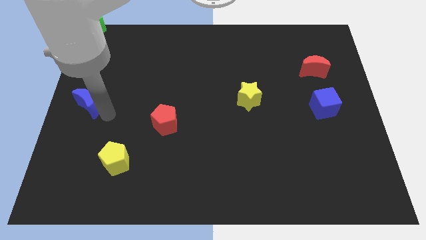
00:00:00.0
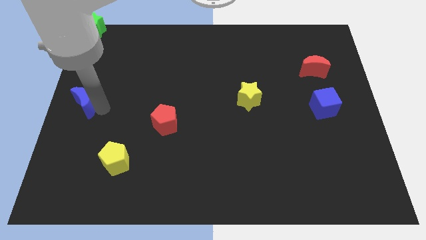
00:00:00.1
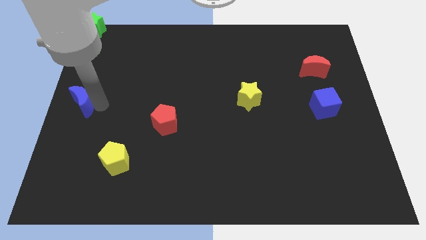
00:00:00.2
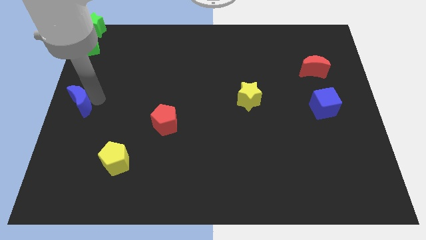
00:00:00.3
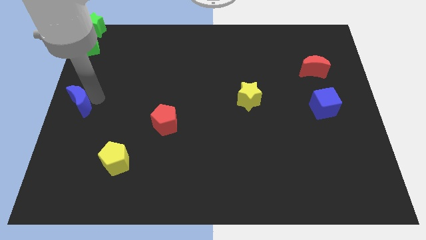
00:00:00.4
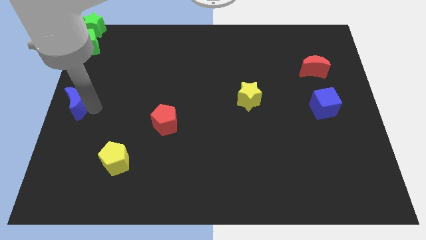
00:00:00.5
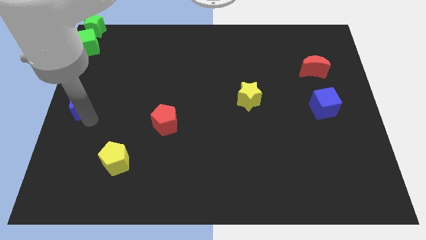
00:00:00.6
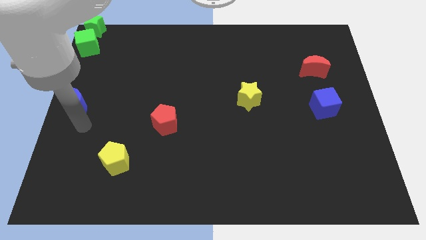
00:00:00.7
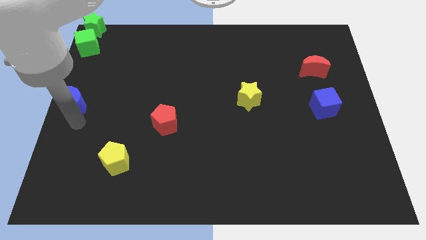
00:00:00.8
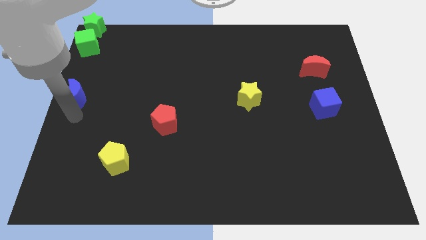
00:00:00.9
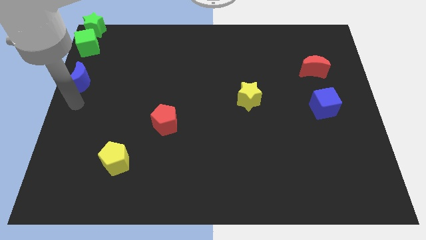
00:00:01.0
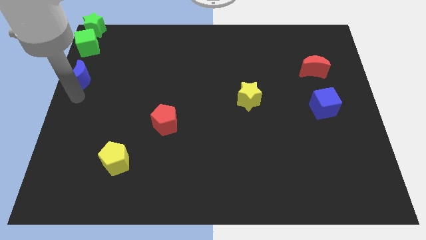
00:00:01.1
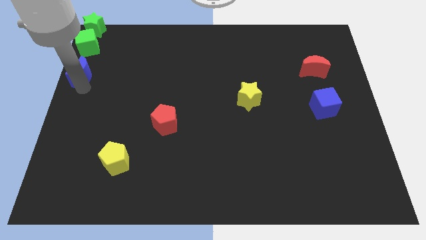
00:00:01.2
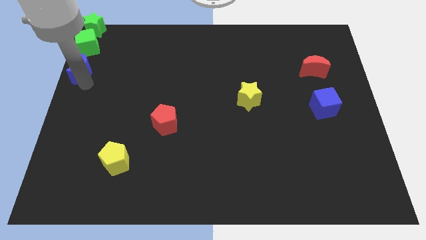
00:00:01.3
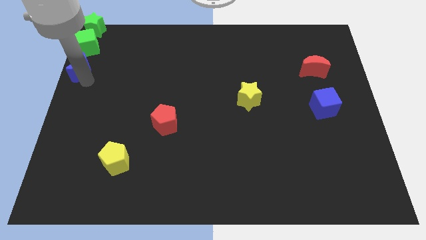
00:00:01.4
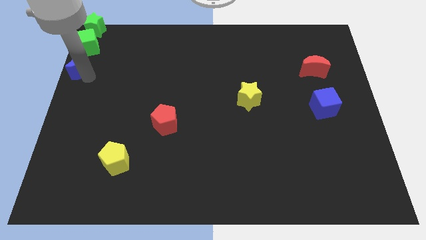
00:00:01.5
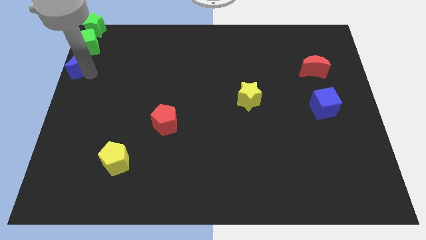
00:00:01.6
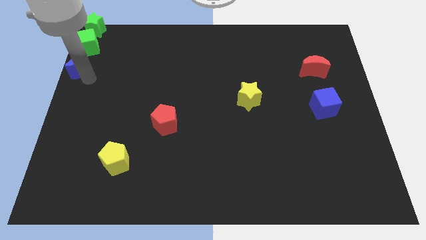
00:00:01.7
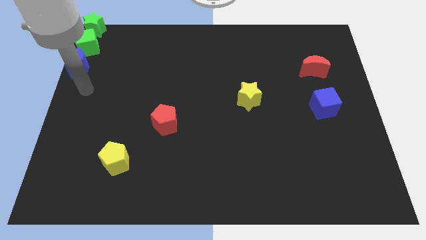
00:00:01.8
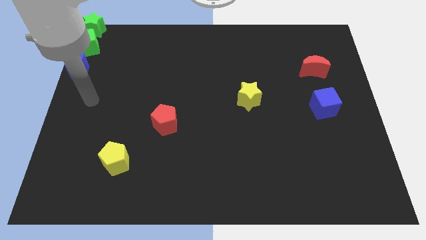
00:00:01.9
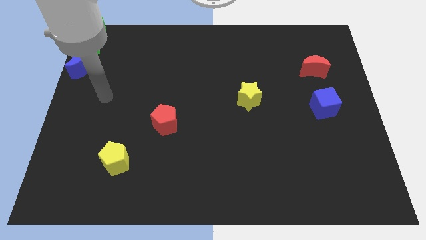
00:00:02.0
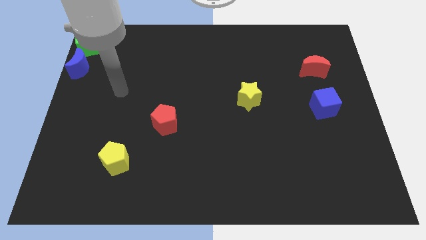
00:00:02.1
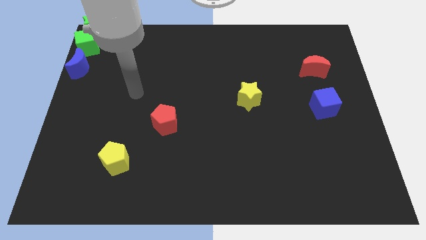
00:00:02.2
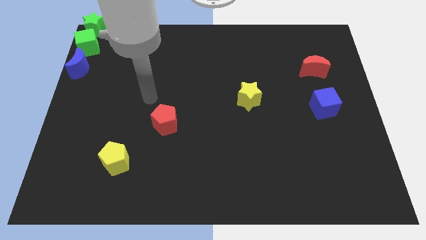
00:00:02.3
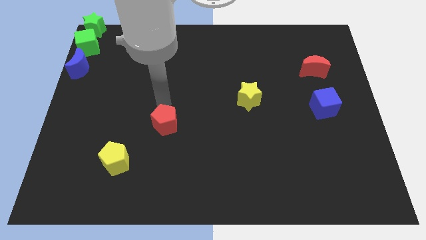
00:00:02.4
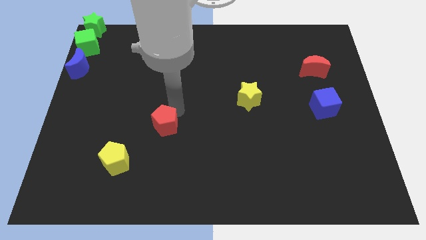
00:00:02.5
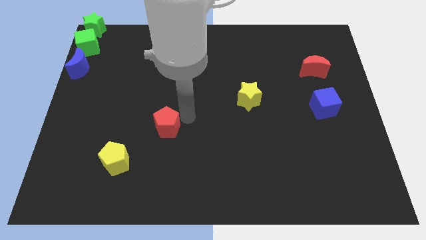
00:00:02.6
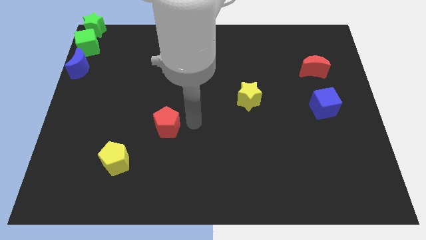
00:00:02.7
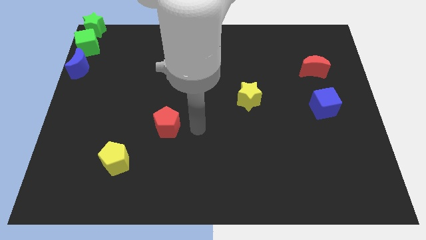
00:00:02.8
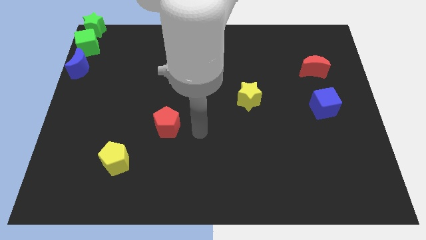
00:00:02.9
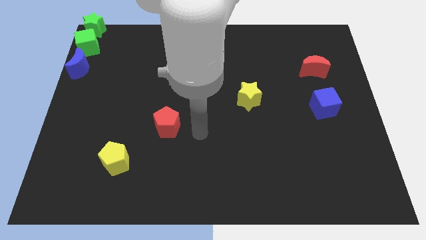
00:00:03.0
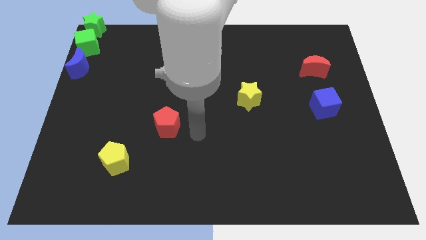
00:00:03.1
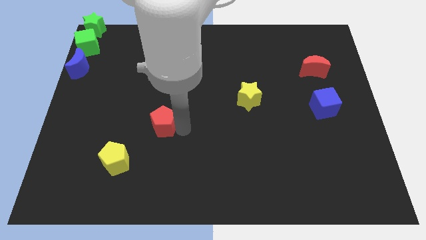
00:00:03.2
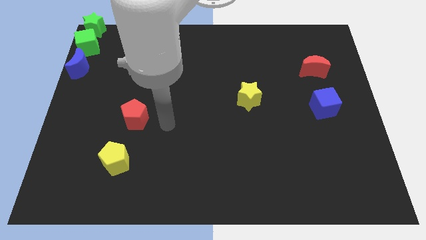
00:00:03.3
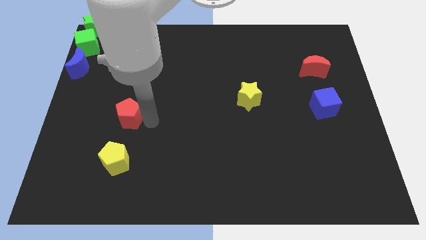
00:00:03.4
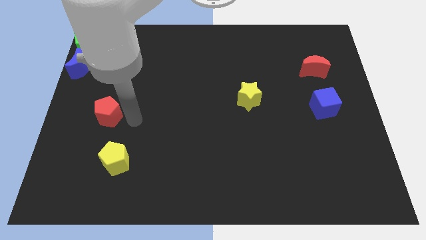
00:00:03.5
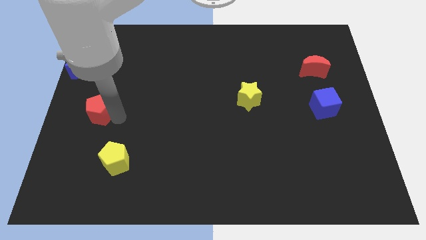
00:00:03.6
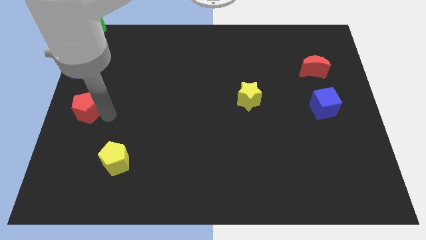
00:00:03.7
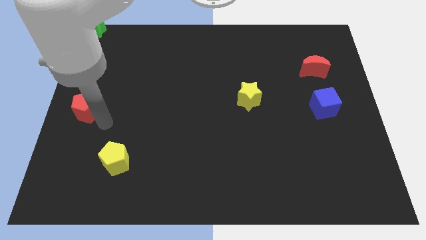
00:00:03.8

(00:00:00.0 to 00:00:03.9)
place the red pentagon diagonal to the blue moon

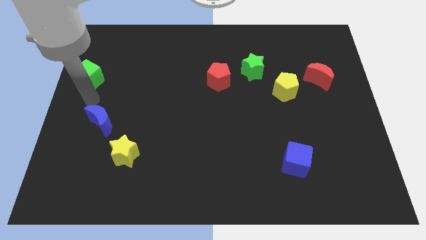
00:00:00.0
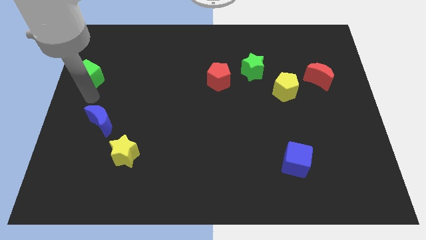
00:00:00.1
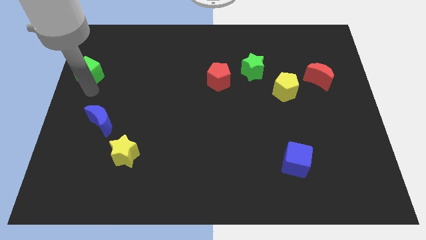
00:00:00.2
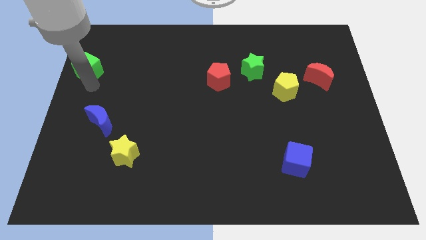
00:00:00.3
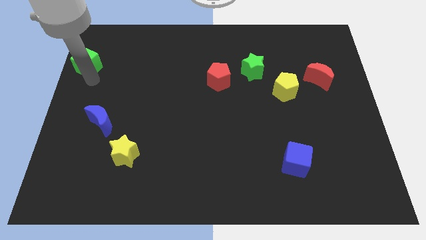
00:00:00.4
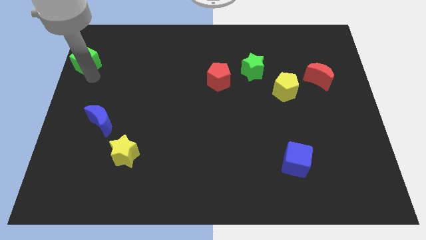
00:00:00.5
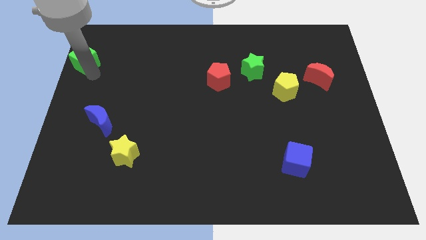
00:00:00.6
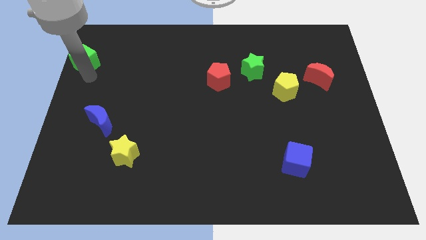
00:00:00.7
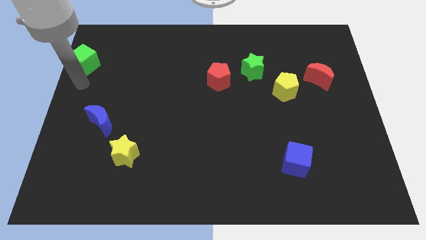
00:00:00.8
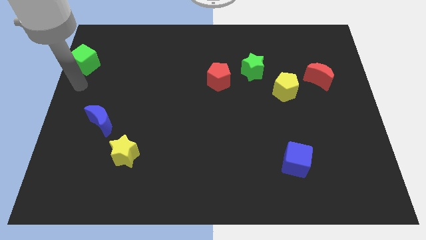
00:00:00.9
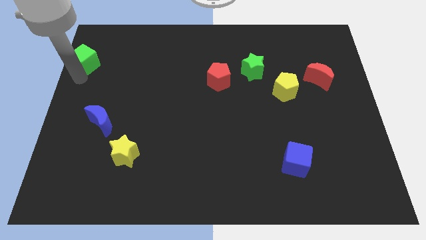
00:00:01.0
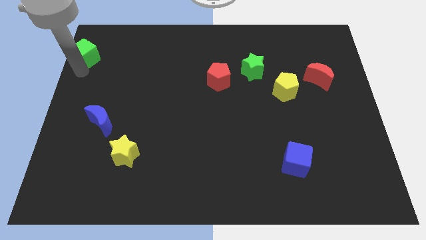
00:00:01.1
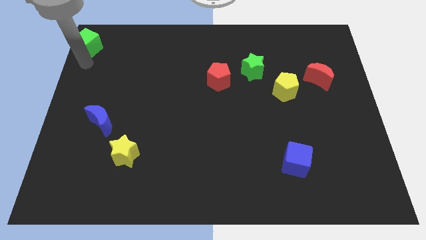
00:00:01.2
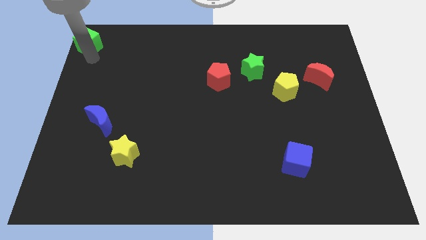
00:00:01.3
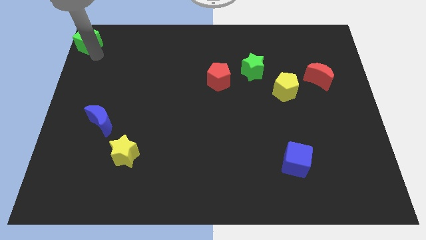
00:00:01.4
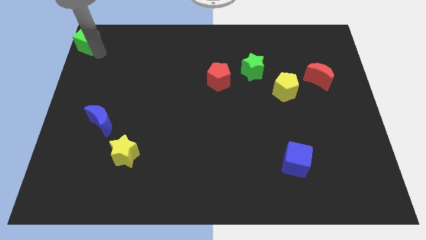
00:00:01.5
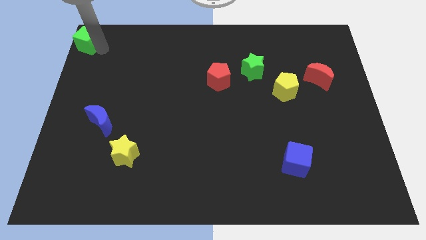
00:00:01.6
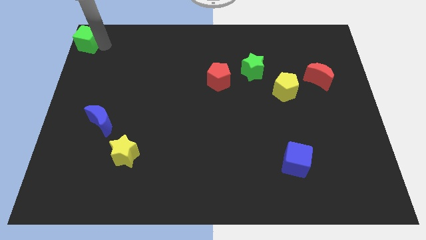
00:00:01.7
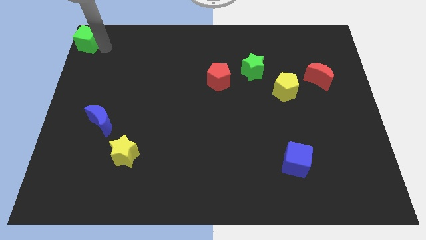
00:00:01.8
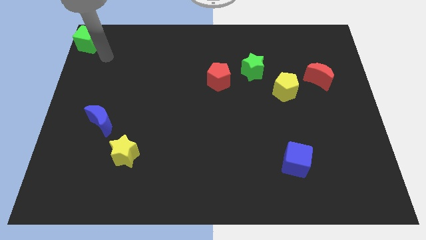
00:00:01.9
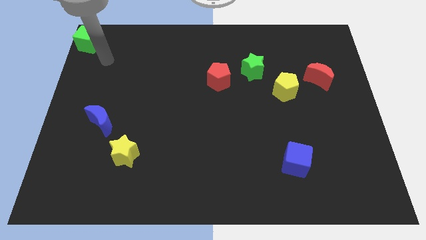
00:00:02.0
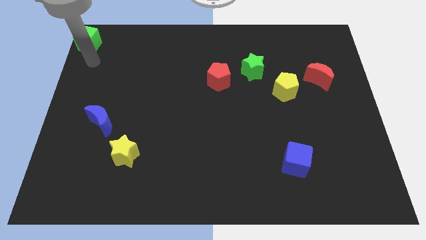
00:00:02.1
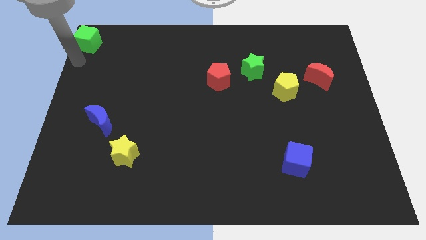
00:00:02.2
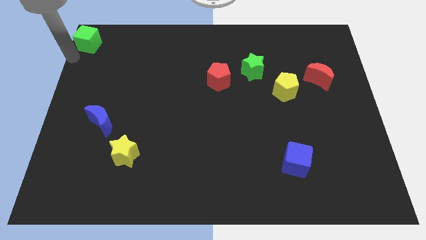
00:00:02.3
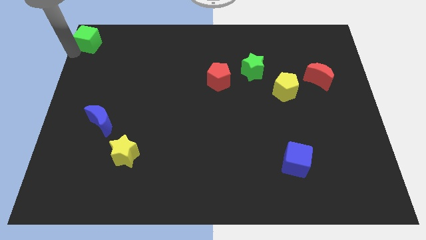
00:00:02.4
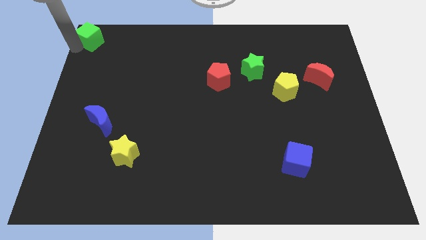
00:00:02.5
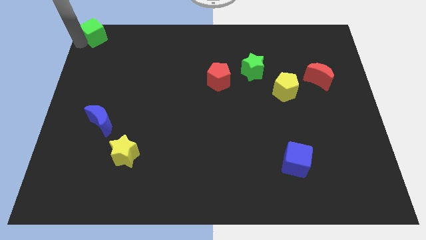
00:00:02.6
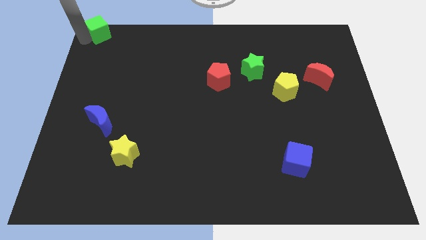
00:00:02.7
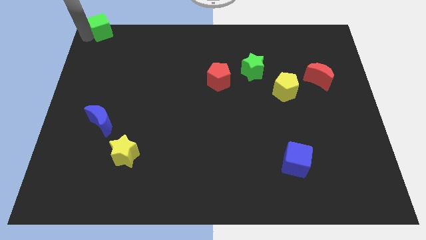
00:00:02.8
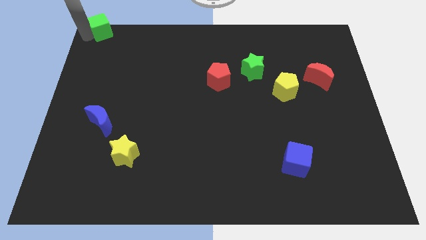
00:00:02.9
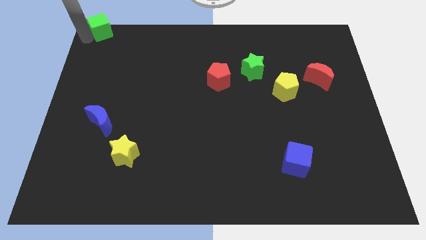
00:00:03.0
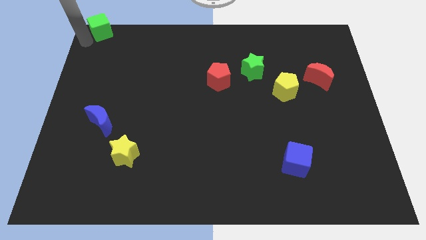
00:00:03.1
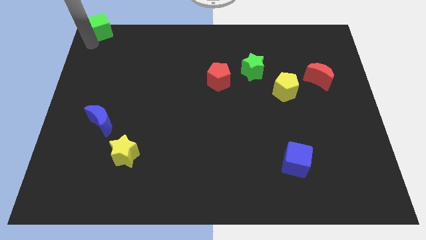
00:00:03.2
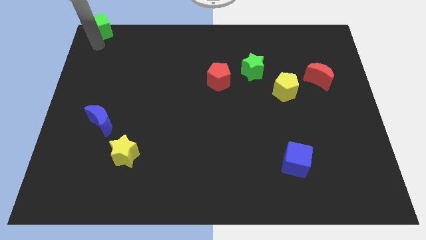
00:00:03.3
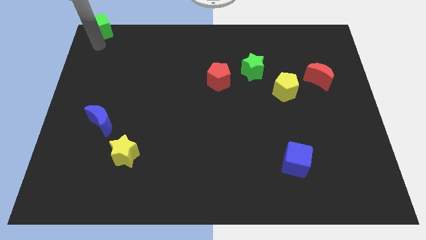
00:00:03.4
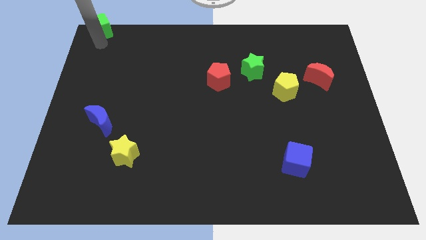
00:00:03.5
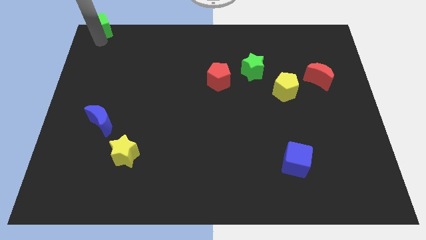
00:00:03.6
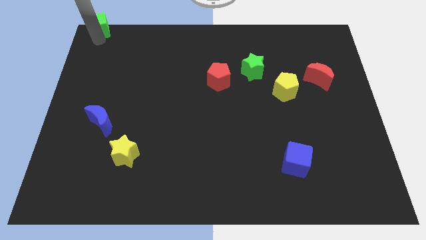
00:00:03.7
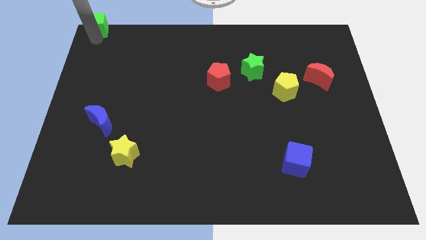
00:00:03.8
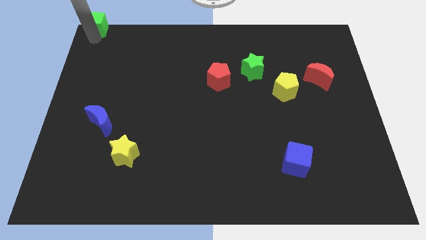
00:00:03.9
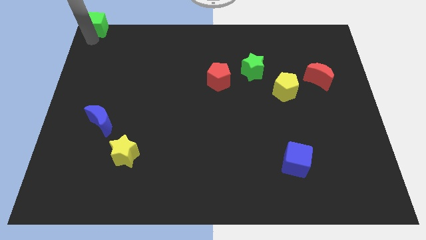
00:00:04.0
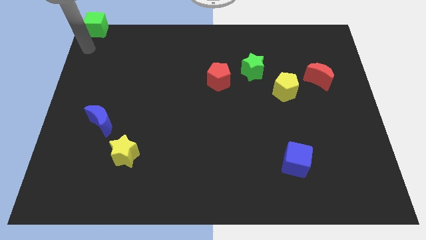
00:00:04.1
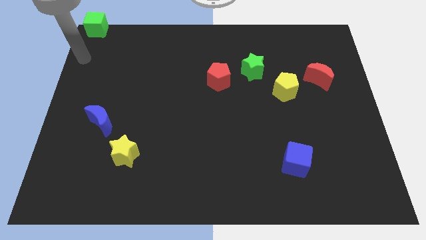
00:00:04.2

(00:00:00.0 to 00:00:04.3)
place the green cube at the top left corner of the board

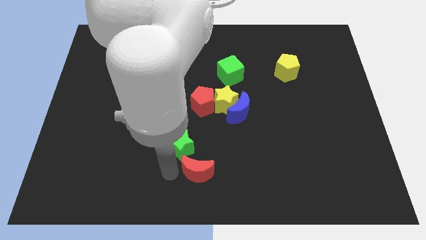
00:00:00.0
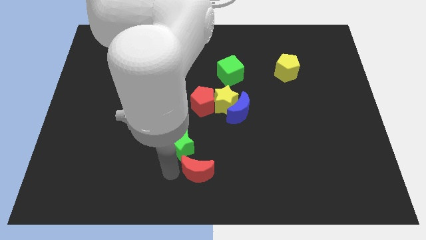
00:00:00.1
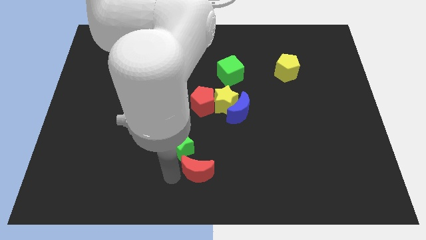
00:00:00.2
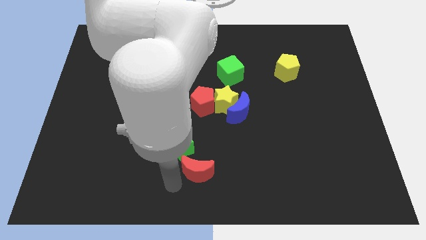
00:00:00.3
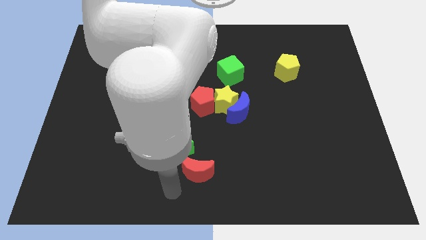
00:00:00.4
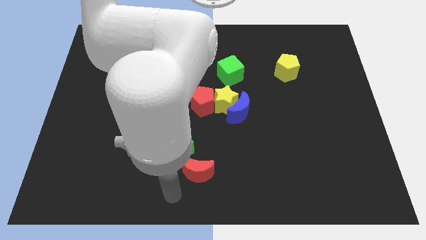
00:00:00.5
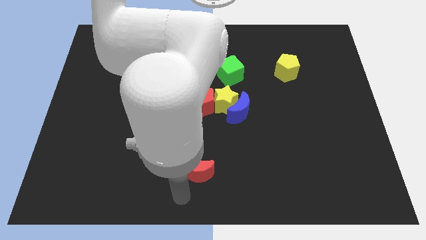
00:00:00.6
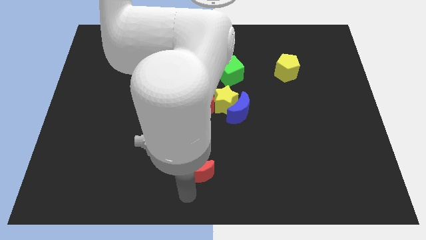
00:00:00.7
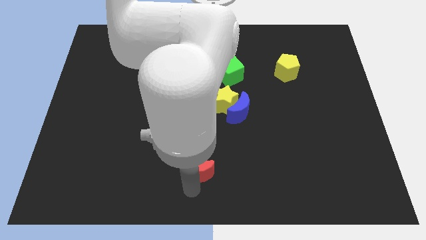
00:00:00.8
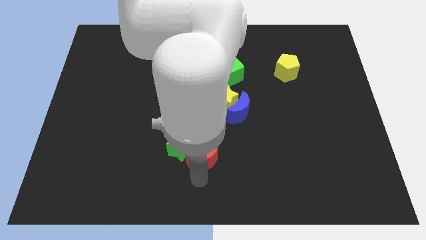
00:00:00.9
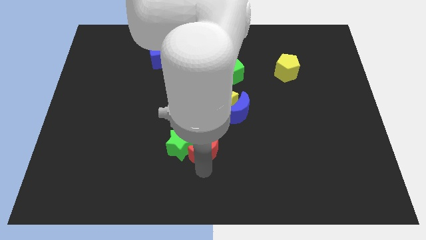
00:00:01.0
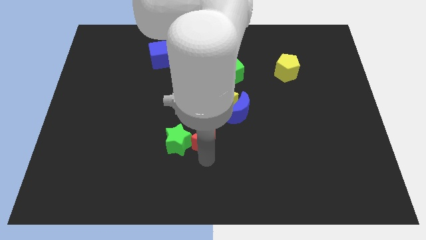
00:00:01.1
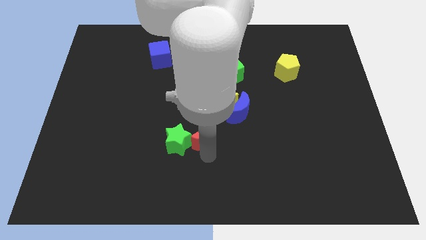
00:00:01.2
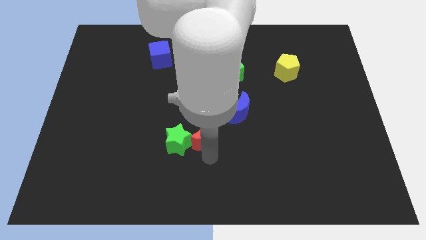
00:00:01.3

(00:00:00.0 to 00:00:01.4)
push red moon into the group of blocks
